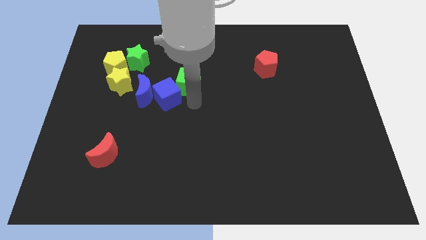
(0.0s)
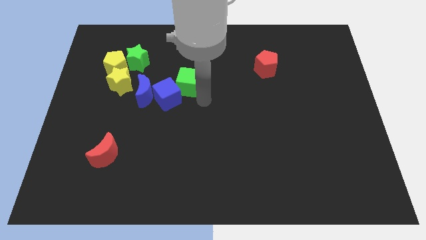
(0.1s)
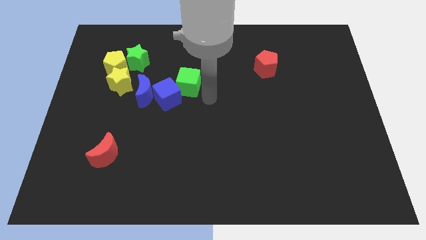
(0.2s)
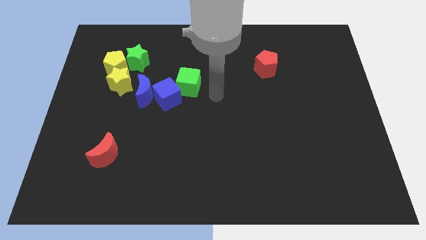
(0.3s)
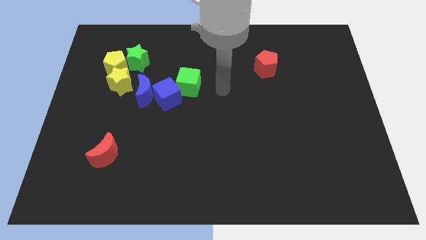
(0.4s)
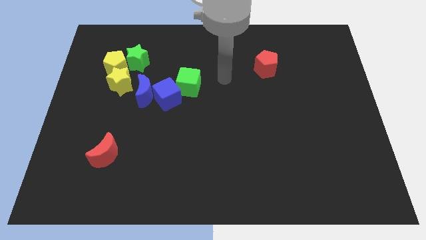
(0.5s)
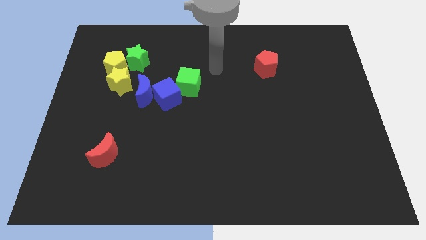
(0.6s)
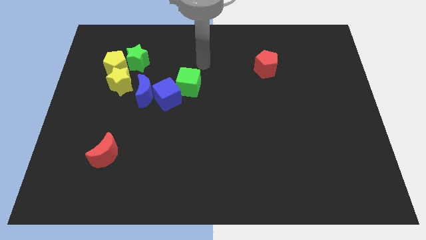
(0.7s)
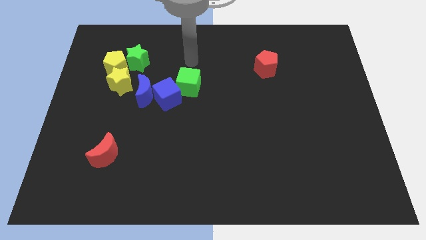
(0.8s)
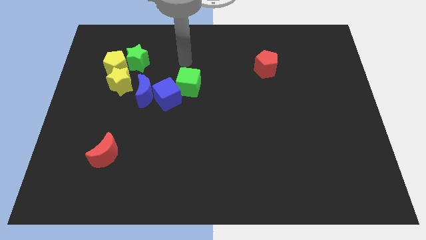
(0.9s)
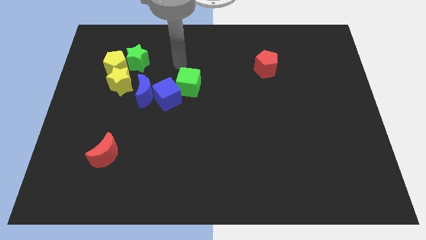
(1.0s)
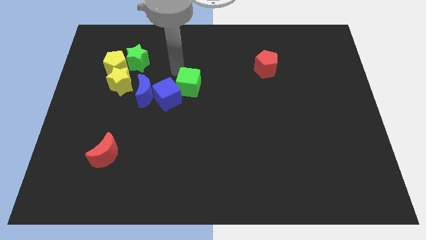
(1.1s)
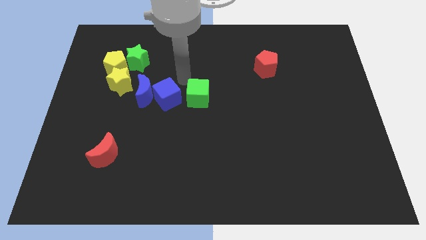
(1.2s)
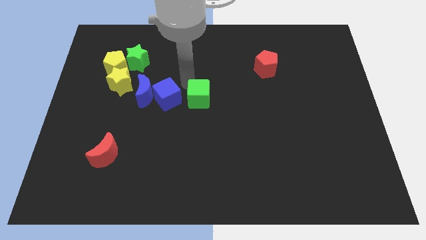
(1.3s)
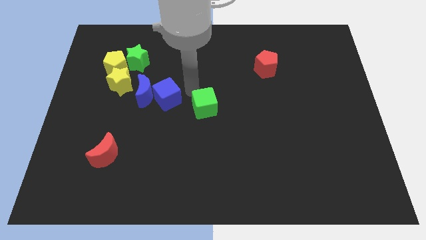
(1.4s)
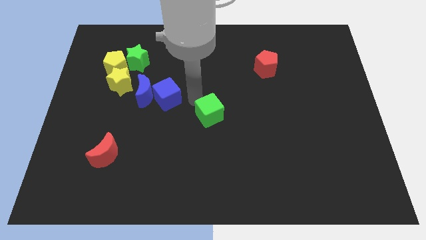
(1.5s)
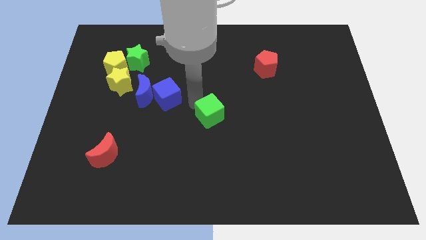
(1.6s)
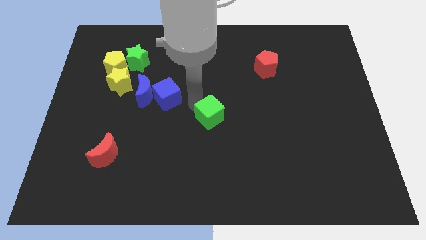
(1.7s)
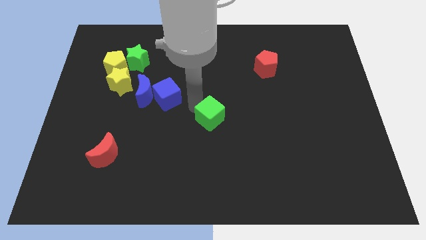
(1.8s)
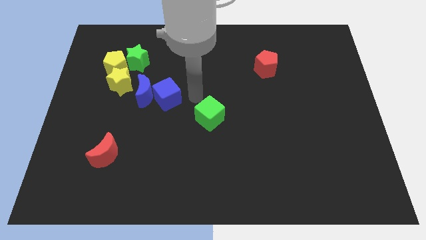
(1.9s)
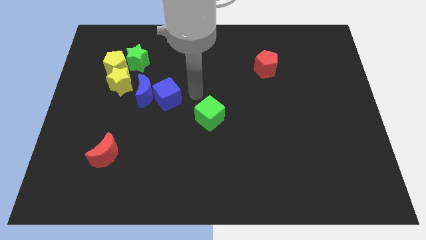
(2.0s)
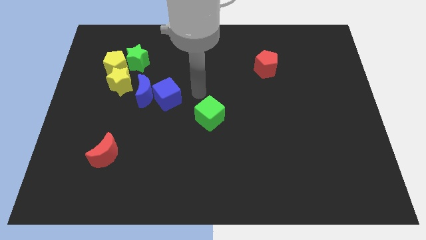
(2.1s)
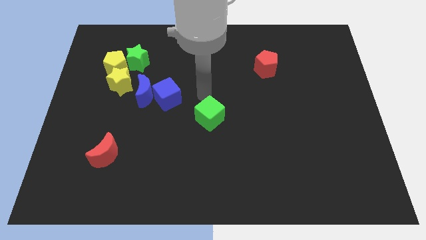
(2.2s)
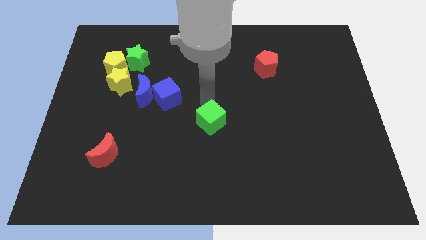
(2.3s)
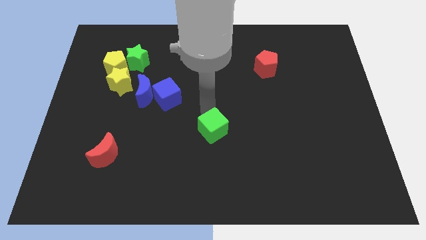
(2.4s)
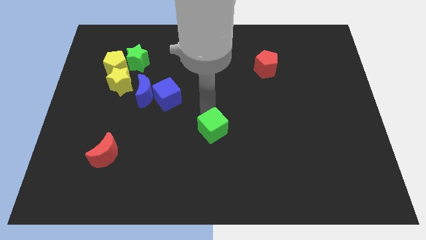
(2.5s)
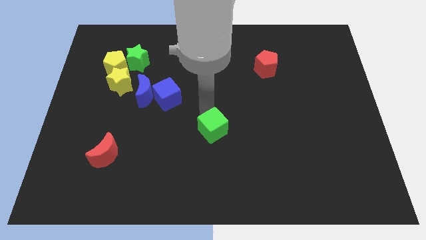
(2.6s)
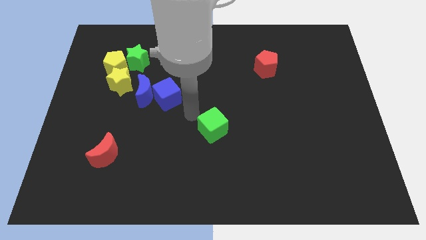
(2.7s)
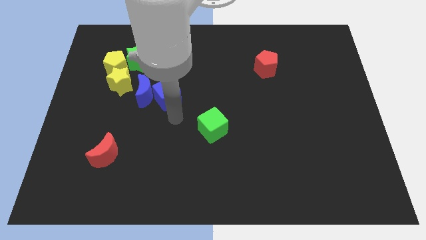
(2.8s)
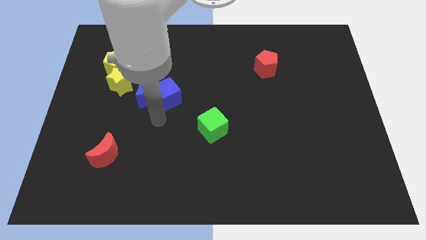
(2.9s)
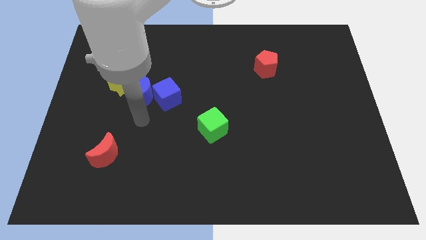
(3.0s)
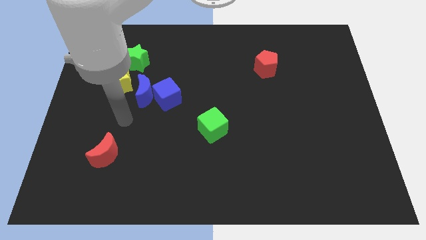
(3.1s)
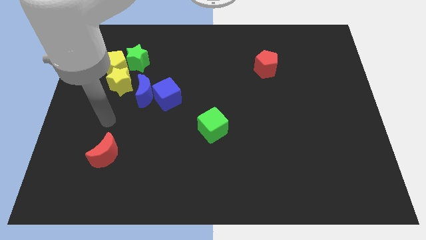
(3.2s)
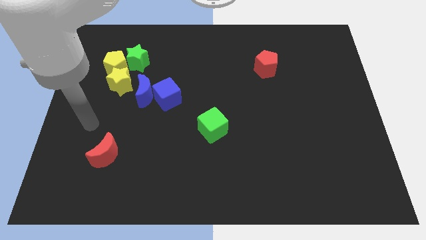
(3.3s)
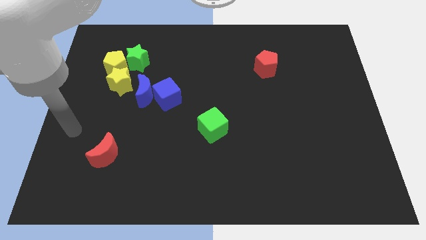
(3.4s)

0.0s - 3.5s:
push the green cube near to the center of board

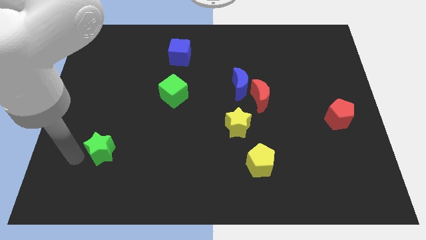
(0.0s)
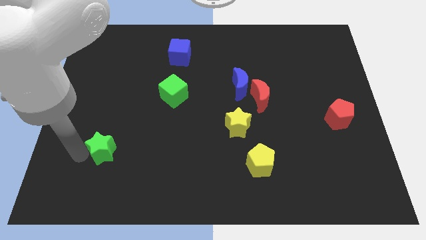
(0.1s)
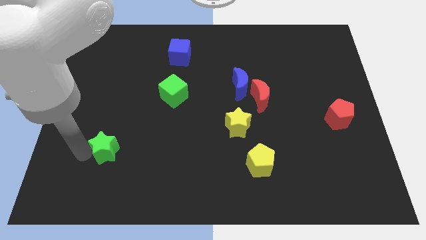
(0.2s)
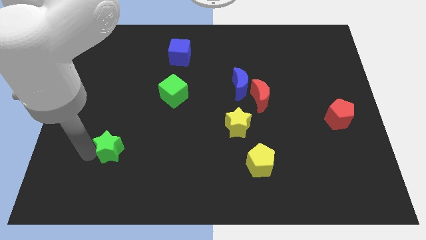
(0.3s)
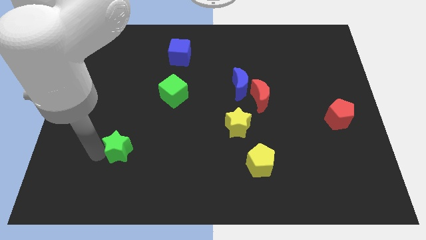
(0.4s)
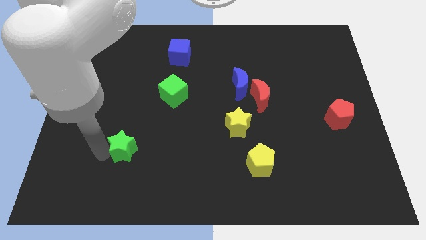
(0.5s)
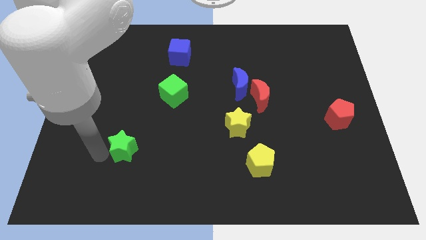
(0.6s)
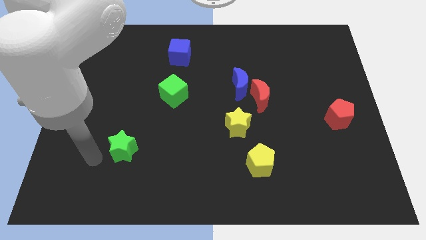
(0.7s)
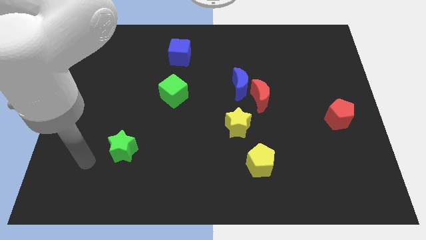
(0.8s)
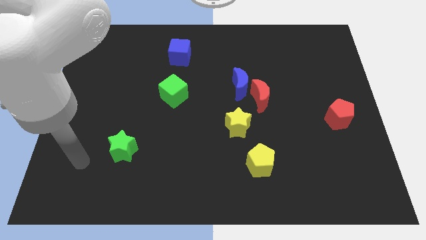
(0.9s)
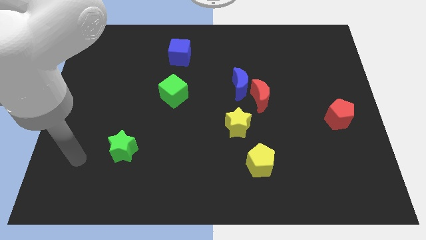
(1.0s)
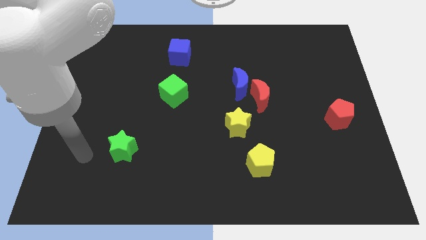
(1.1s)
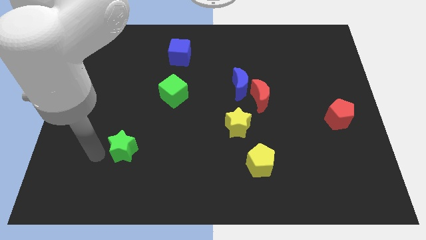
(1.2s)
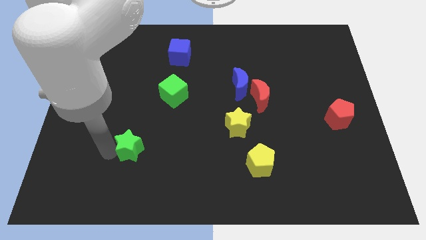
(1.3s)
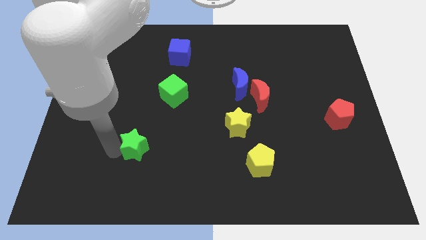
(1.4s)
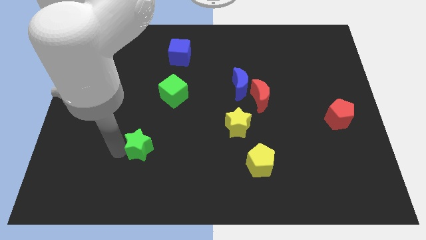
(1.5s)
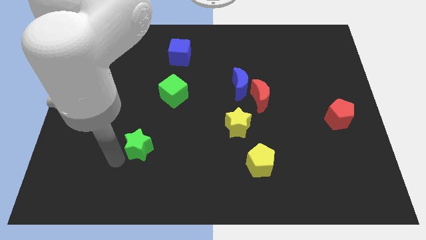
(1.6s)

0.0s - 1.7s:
move the green star slightly to the right

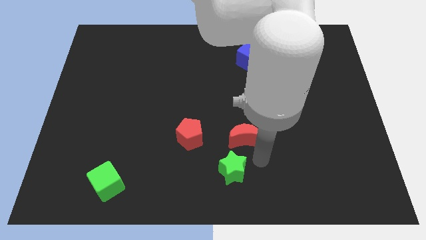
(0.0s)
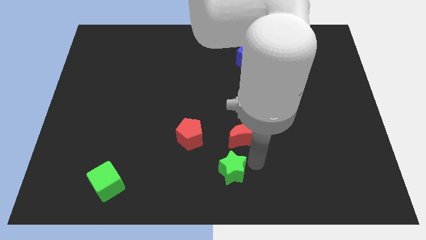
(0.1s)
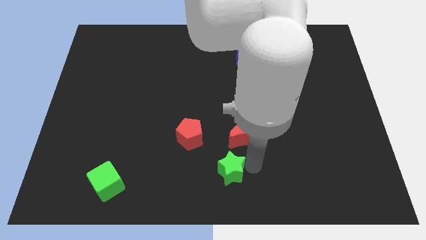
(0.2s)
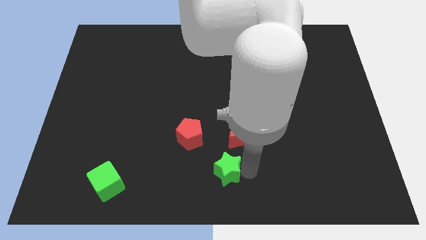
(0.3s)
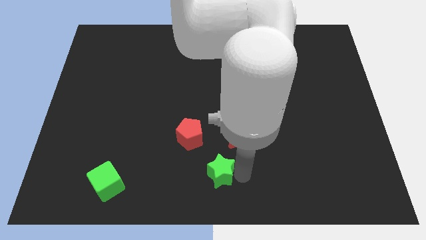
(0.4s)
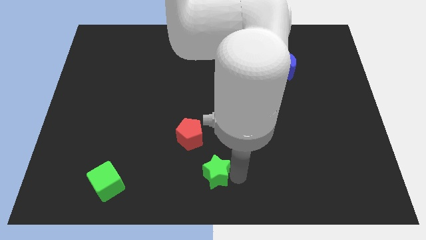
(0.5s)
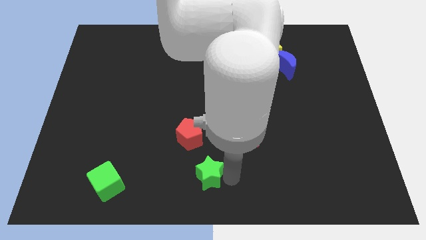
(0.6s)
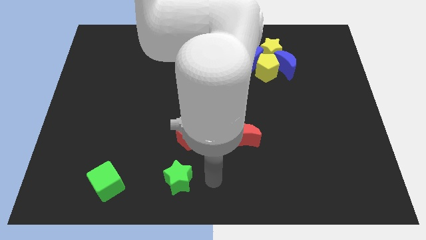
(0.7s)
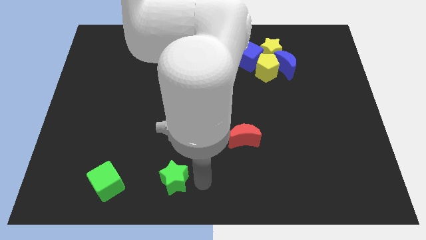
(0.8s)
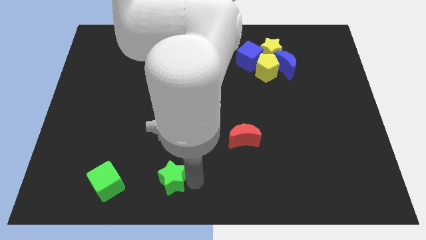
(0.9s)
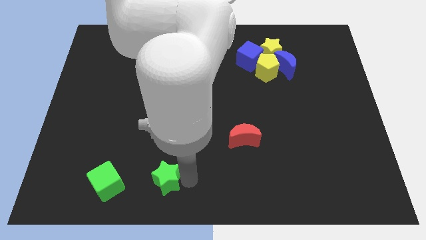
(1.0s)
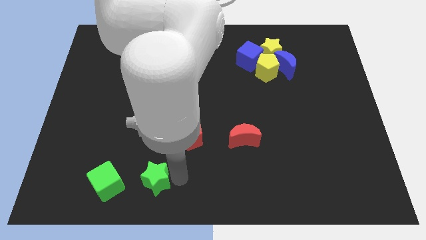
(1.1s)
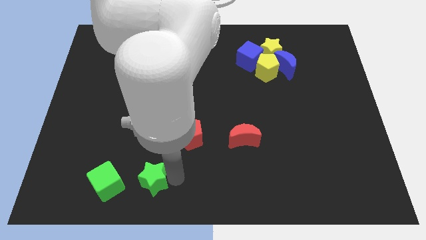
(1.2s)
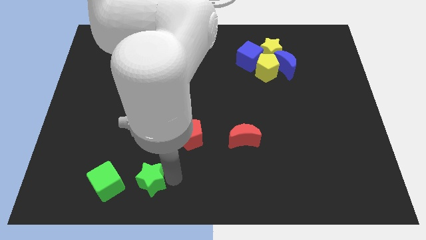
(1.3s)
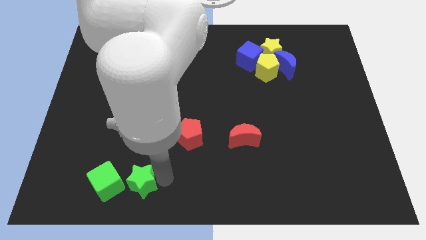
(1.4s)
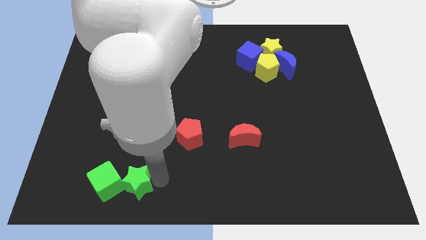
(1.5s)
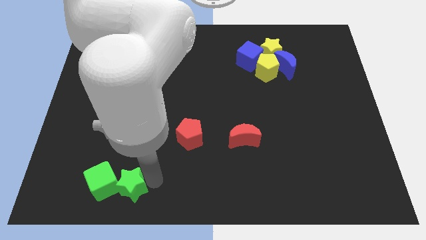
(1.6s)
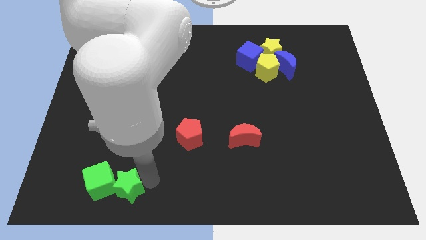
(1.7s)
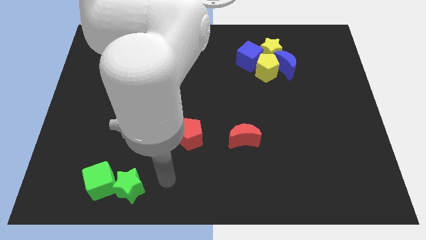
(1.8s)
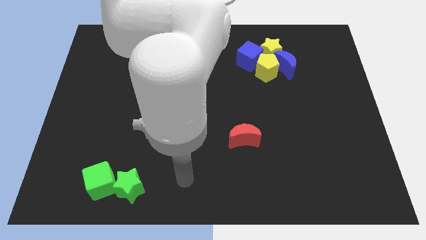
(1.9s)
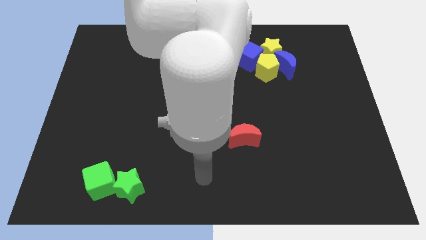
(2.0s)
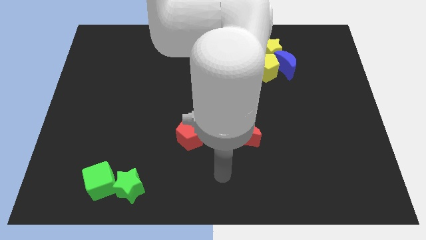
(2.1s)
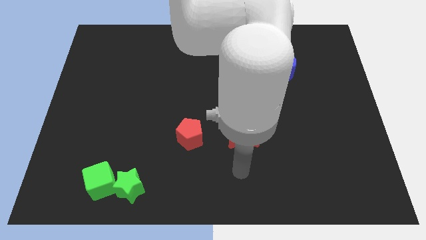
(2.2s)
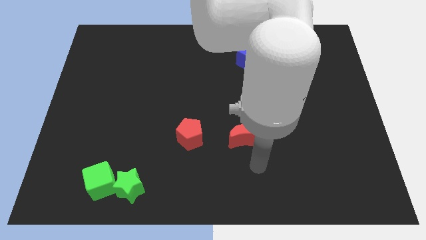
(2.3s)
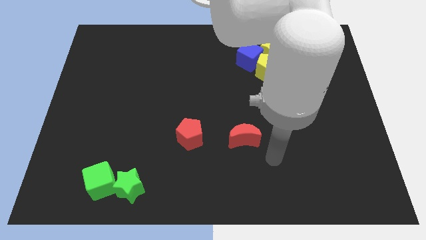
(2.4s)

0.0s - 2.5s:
push the green star into the green cube

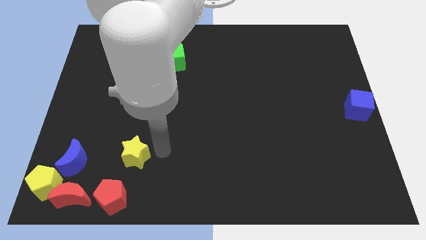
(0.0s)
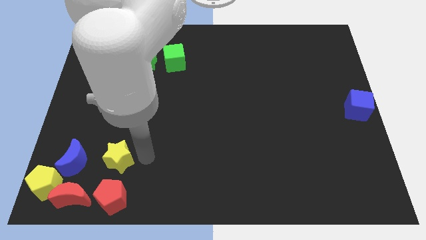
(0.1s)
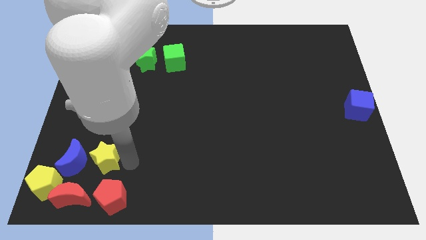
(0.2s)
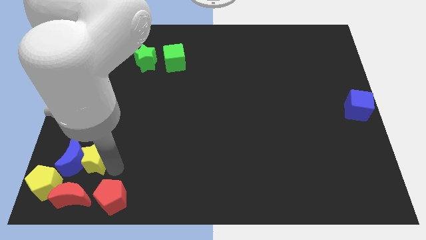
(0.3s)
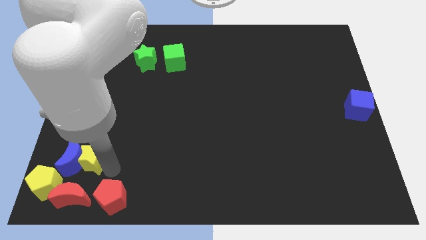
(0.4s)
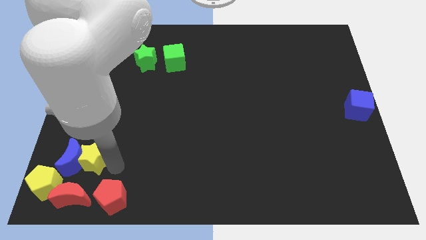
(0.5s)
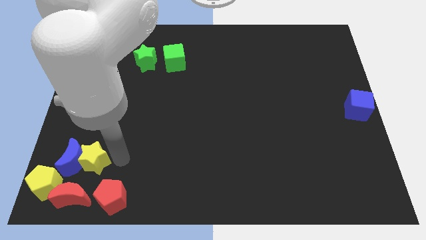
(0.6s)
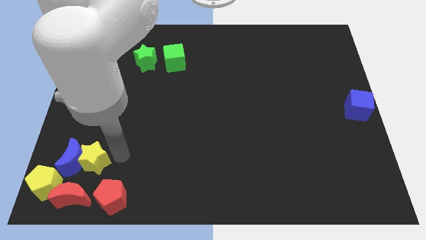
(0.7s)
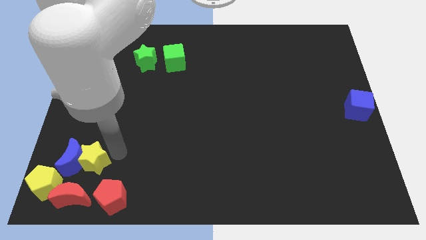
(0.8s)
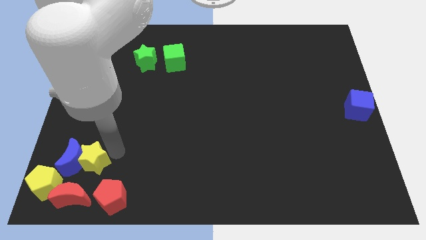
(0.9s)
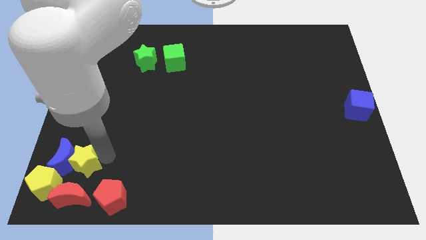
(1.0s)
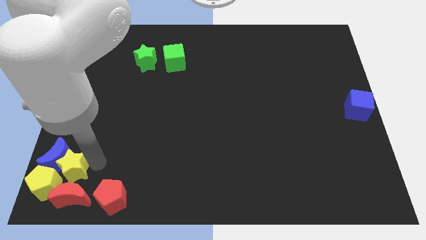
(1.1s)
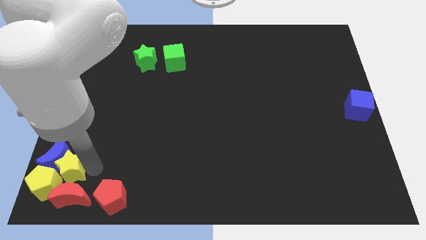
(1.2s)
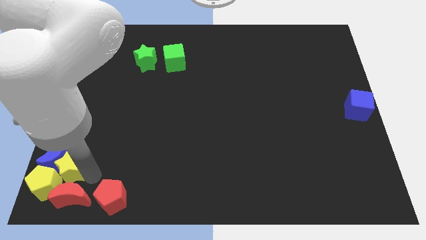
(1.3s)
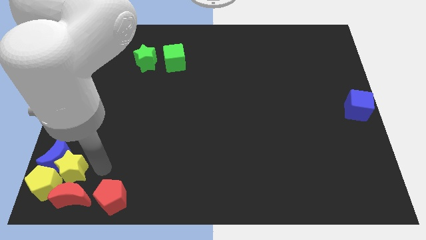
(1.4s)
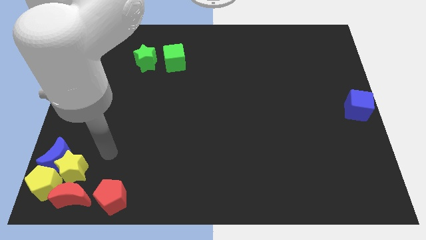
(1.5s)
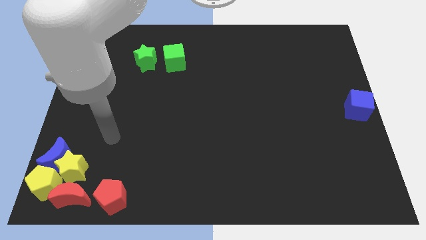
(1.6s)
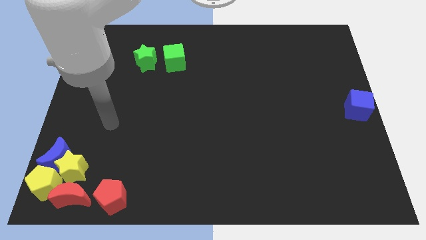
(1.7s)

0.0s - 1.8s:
place the yellow star above the red crescent
